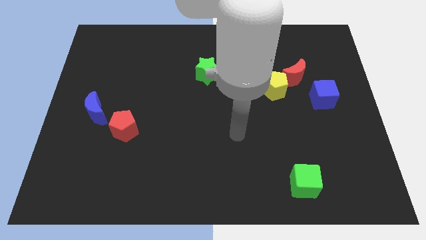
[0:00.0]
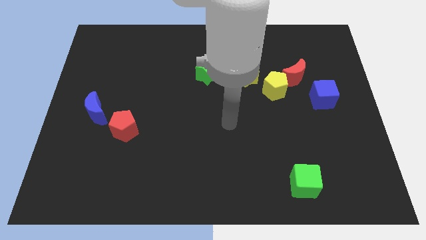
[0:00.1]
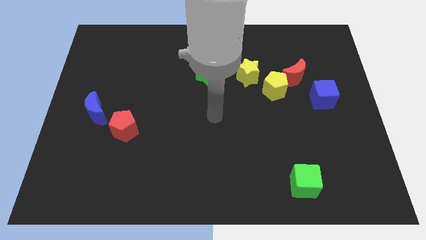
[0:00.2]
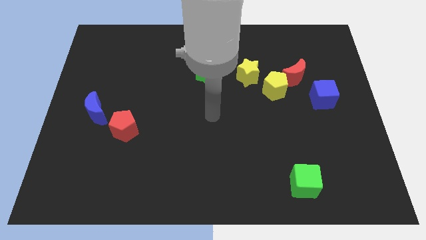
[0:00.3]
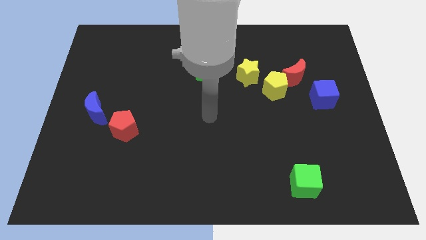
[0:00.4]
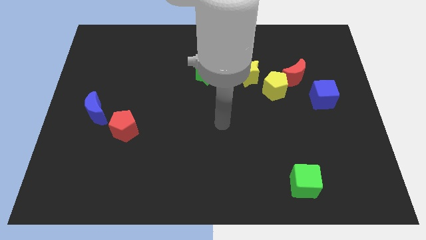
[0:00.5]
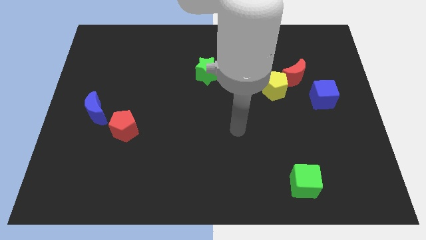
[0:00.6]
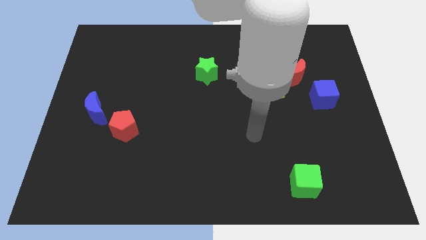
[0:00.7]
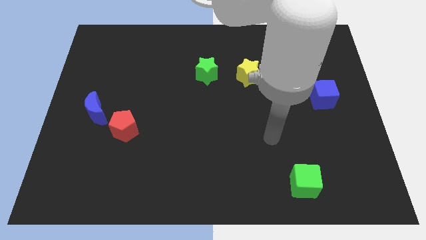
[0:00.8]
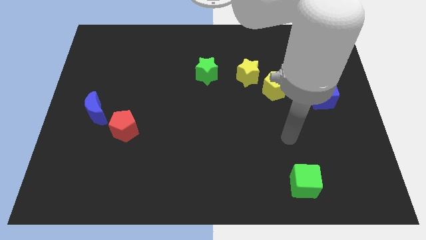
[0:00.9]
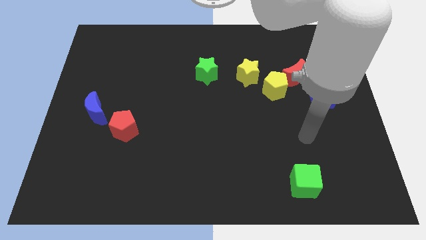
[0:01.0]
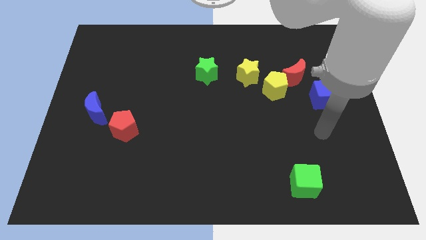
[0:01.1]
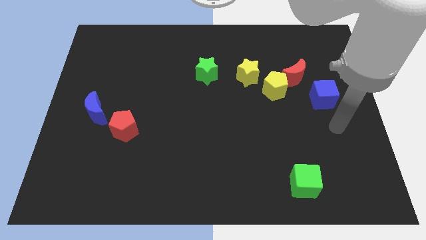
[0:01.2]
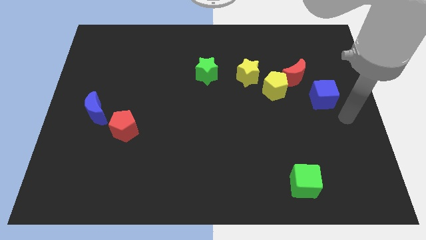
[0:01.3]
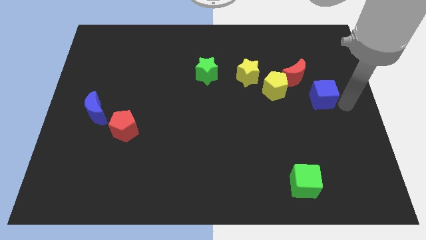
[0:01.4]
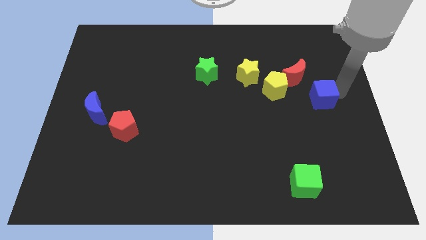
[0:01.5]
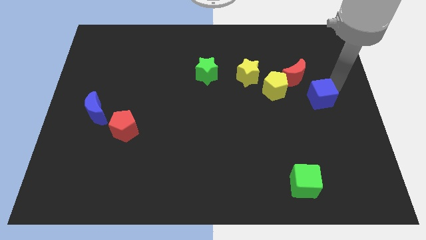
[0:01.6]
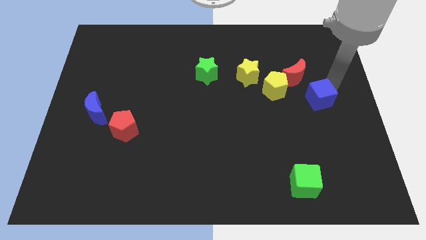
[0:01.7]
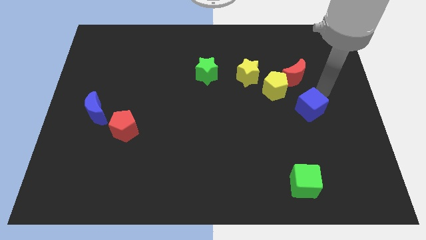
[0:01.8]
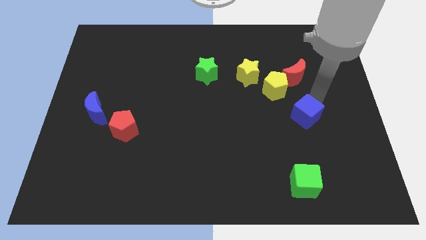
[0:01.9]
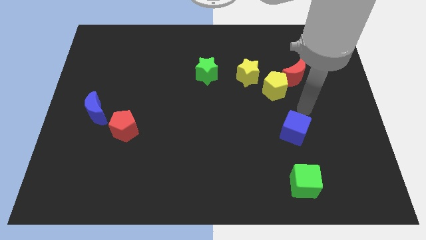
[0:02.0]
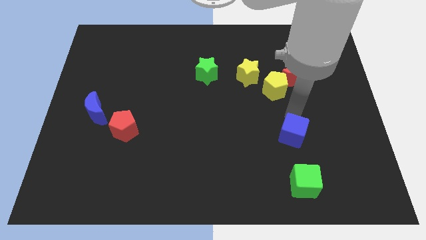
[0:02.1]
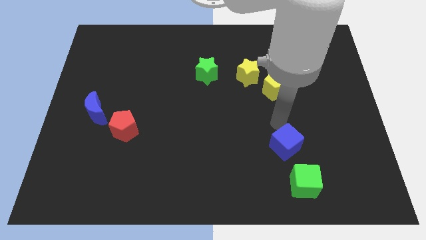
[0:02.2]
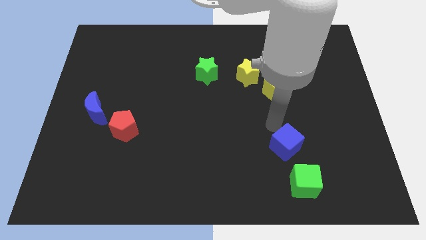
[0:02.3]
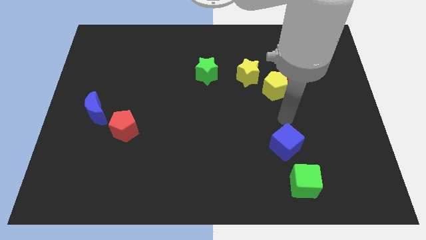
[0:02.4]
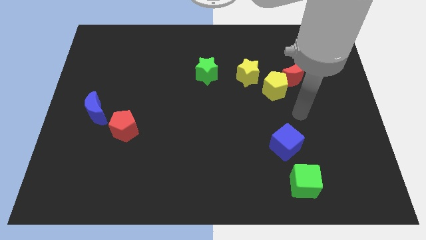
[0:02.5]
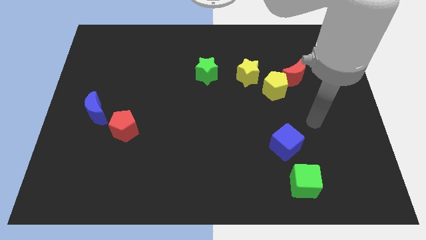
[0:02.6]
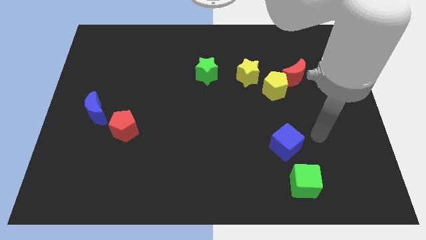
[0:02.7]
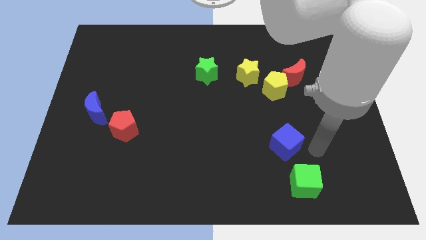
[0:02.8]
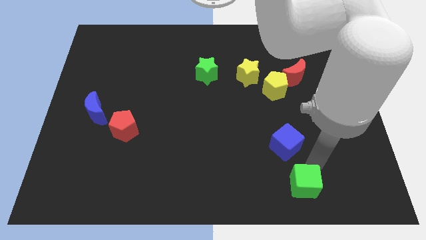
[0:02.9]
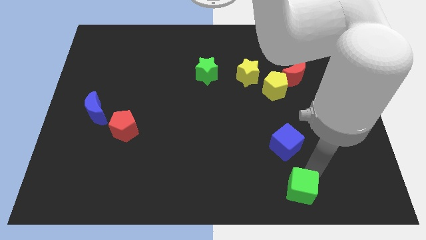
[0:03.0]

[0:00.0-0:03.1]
push the blue cube towards the green cube

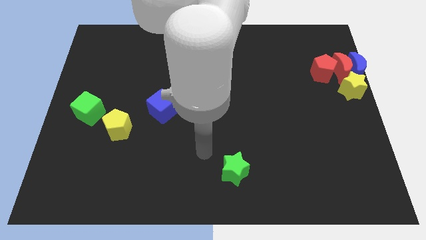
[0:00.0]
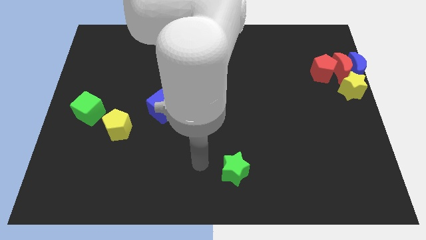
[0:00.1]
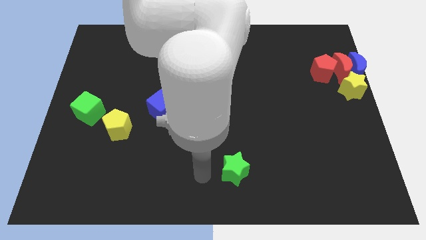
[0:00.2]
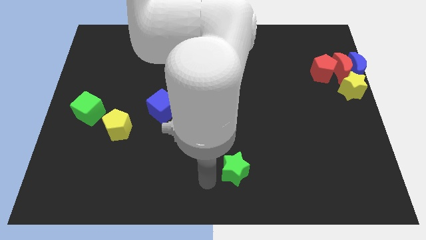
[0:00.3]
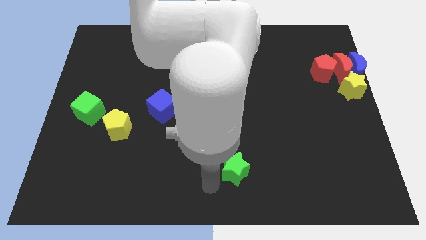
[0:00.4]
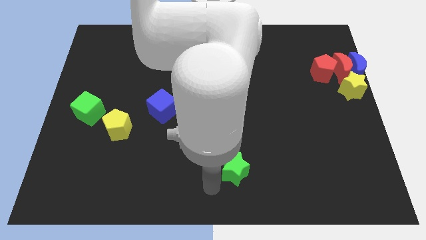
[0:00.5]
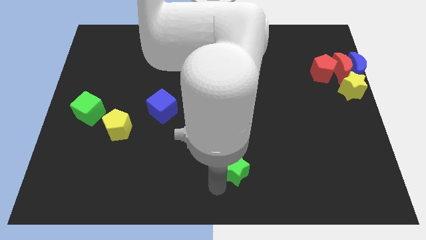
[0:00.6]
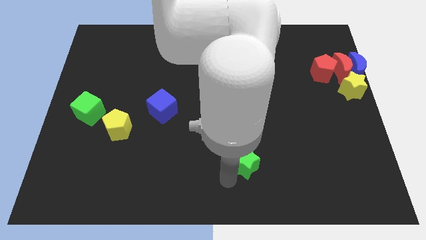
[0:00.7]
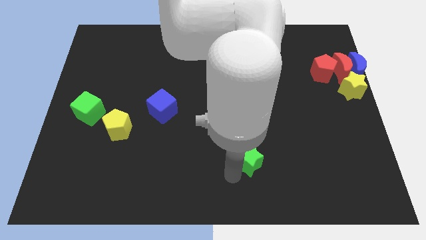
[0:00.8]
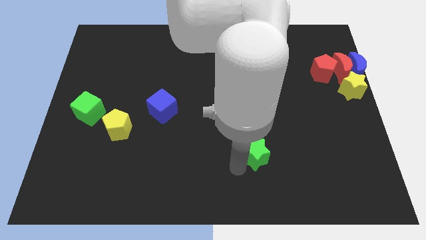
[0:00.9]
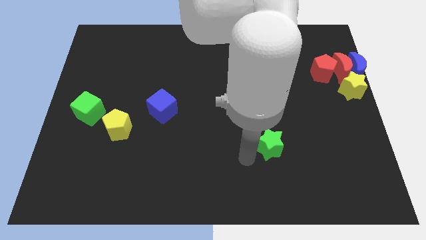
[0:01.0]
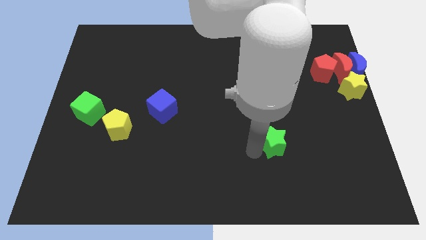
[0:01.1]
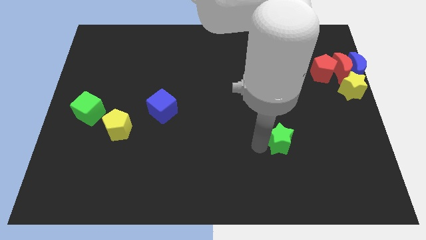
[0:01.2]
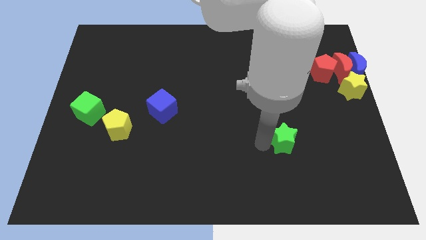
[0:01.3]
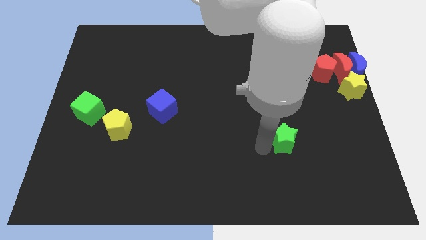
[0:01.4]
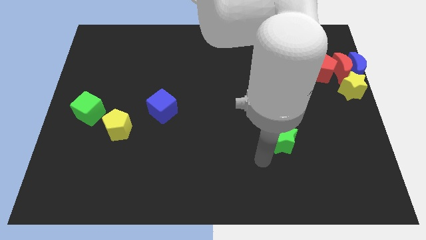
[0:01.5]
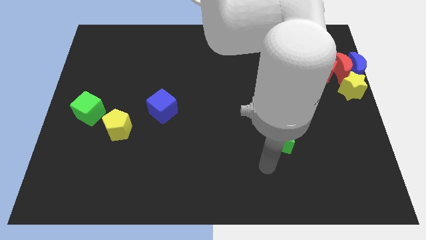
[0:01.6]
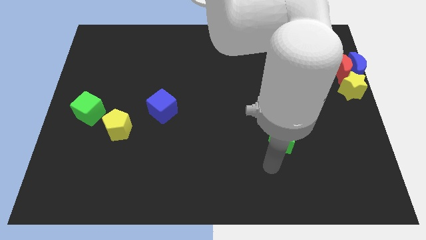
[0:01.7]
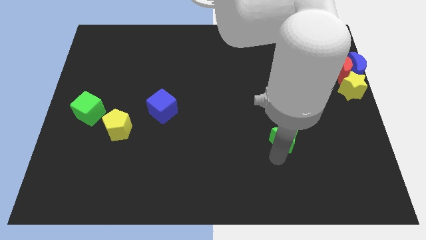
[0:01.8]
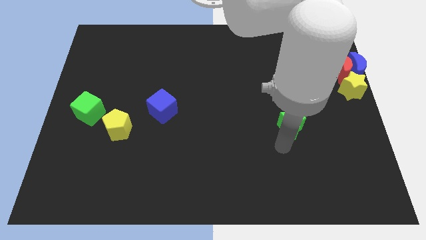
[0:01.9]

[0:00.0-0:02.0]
push green star towards yellow star

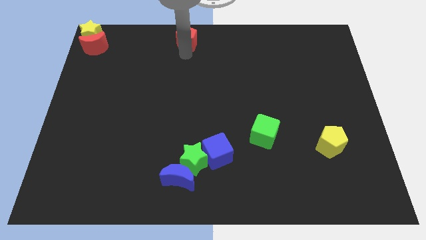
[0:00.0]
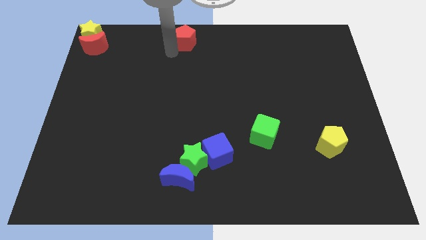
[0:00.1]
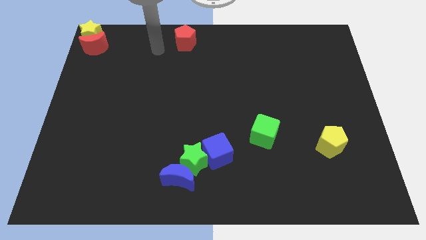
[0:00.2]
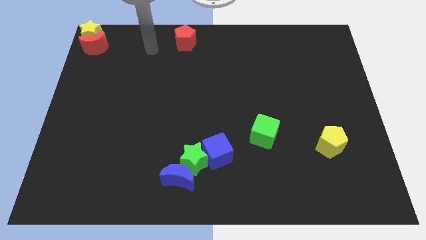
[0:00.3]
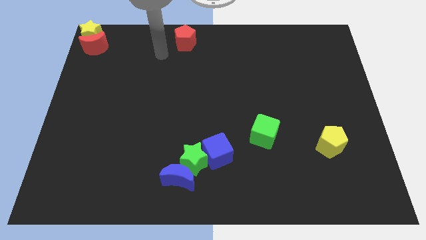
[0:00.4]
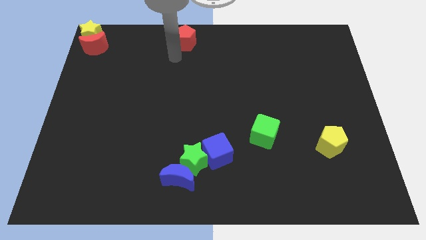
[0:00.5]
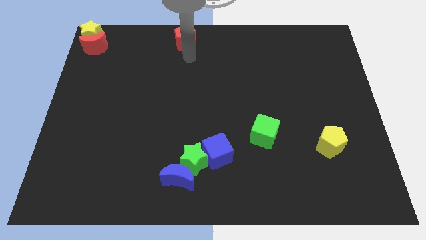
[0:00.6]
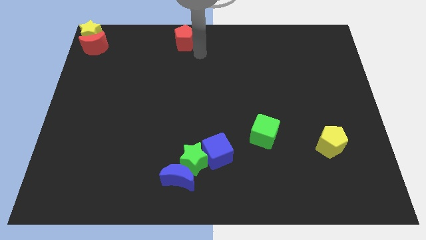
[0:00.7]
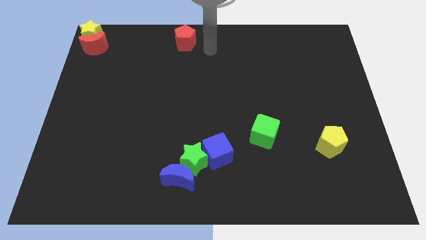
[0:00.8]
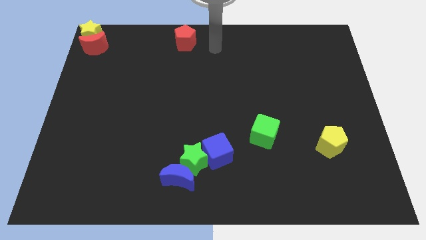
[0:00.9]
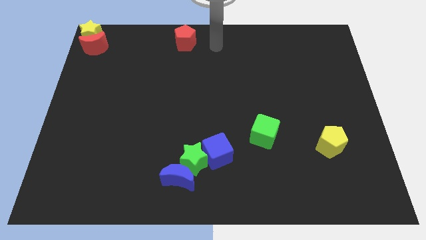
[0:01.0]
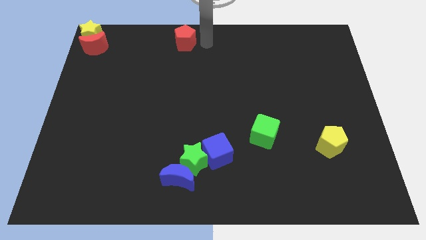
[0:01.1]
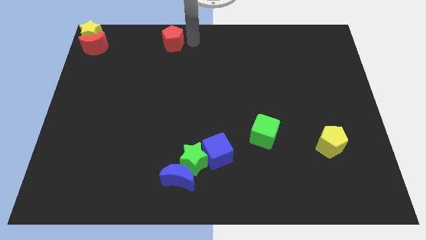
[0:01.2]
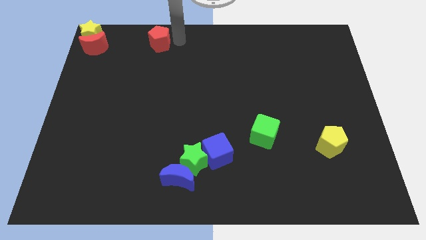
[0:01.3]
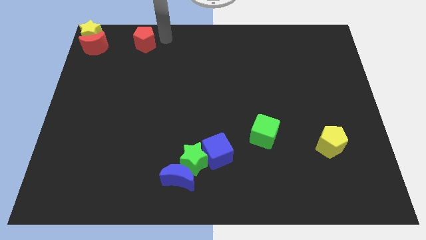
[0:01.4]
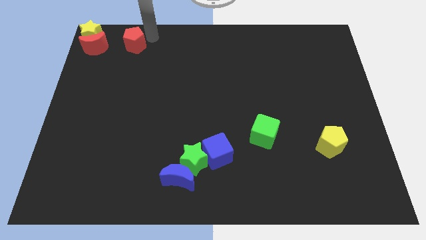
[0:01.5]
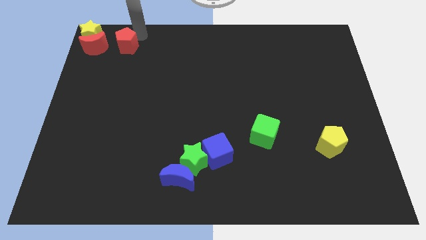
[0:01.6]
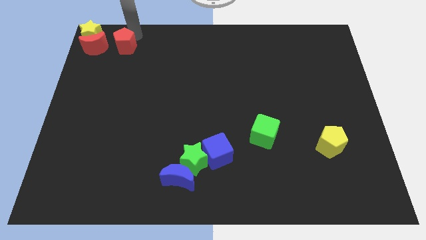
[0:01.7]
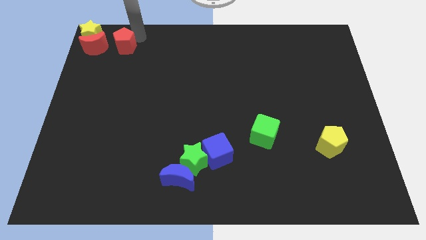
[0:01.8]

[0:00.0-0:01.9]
move the red pentagon to the right of the red crescent

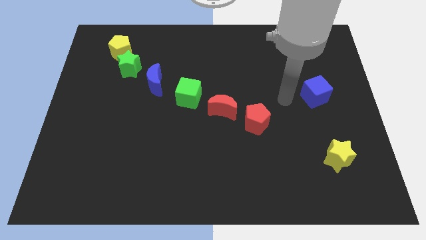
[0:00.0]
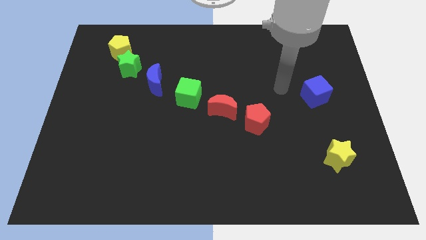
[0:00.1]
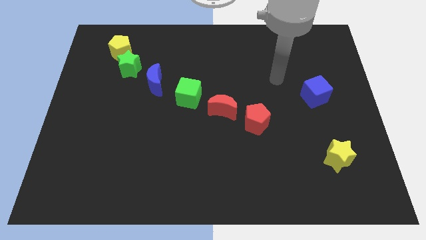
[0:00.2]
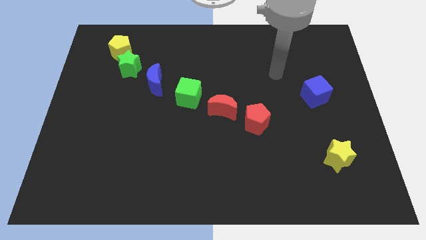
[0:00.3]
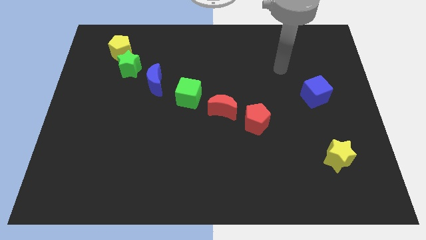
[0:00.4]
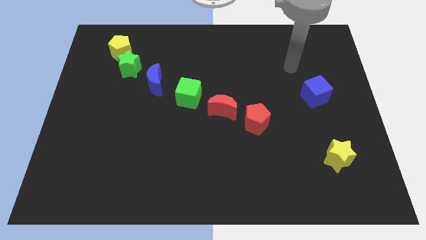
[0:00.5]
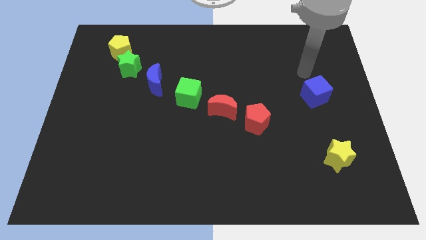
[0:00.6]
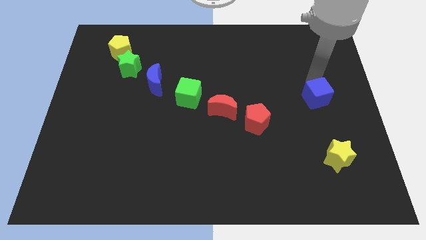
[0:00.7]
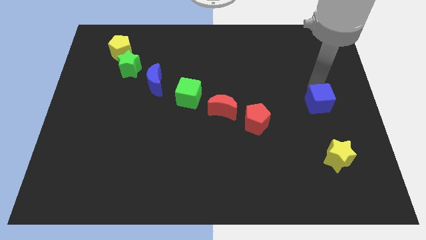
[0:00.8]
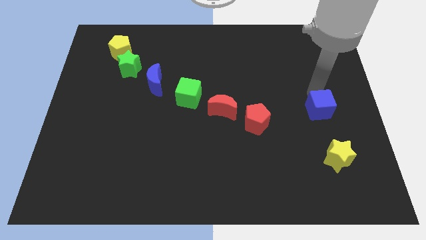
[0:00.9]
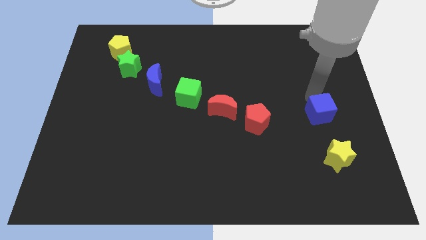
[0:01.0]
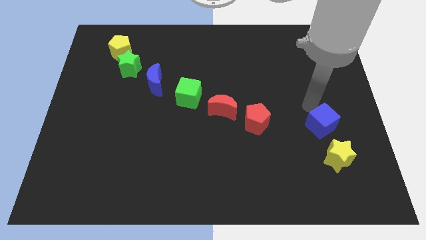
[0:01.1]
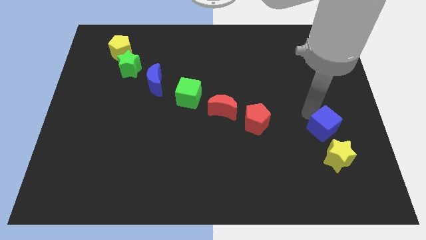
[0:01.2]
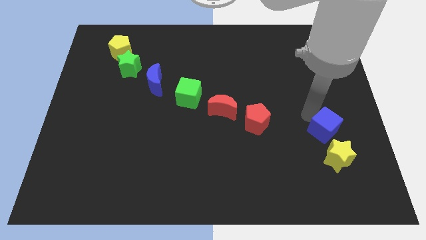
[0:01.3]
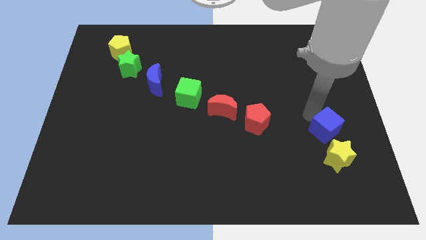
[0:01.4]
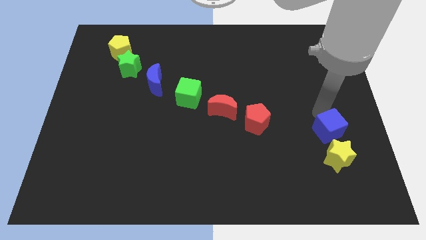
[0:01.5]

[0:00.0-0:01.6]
slide the blue cube to the top left of the yellow star

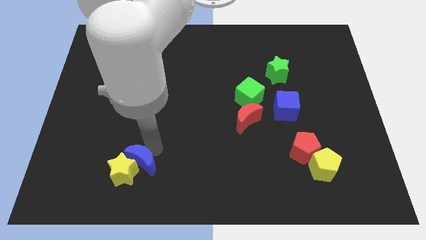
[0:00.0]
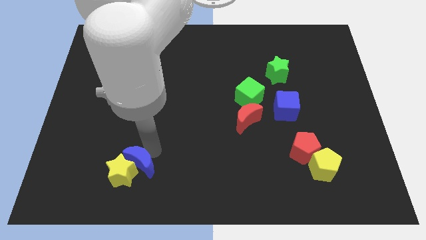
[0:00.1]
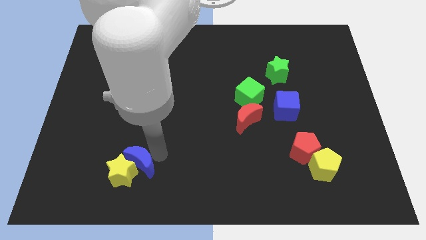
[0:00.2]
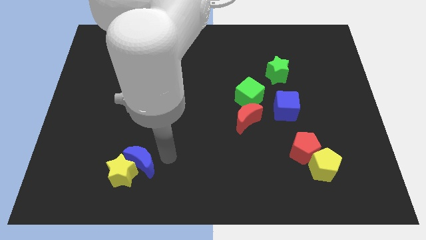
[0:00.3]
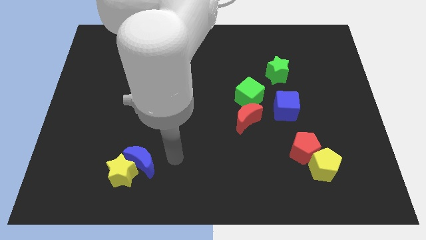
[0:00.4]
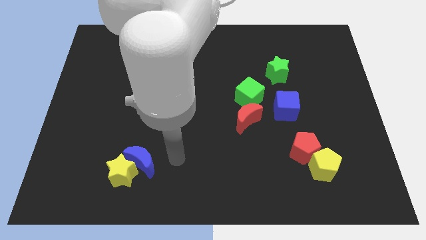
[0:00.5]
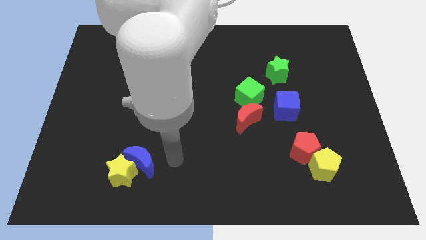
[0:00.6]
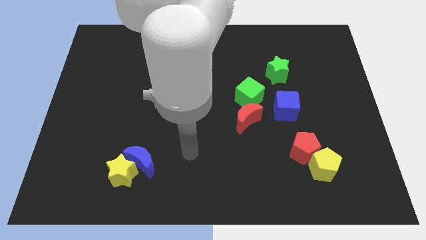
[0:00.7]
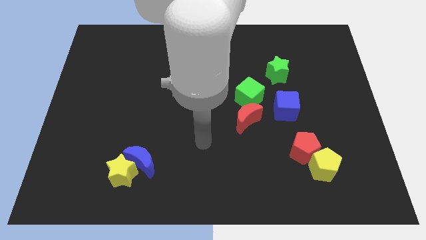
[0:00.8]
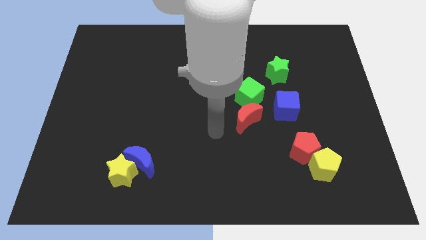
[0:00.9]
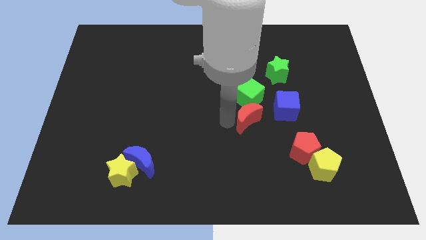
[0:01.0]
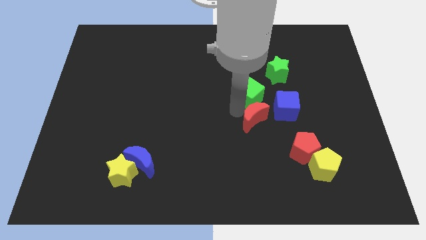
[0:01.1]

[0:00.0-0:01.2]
move your arm away from the blue moon
